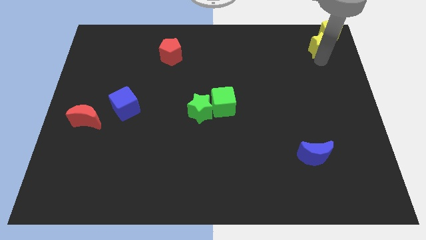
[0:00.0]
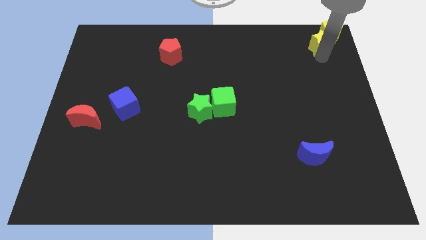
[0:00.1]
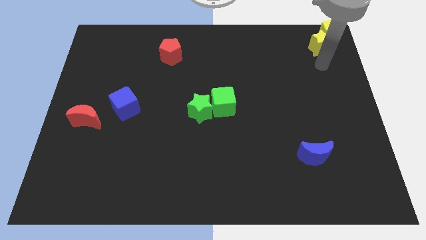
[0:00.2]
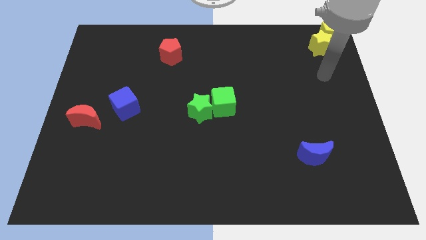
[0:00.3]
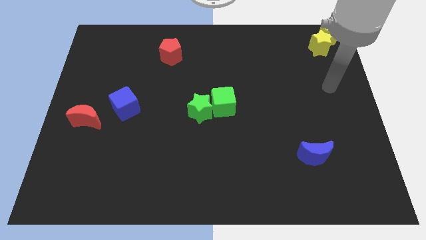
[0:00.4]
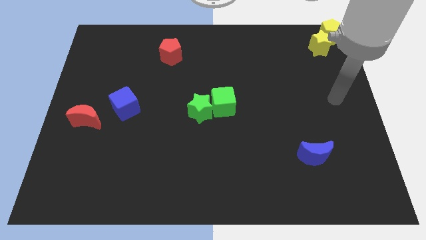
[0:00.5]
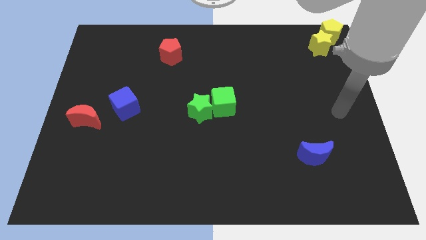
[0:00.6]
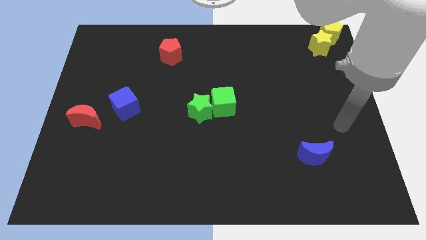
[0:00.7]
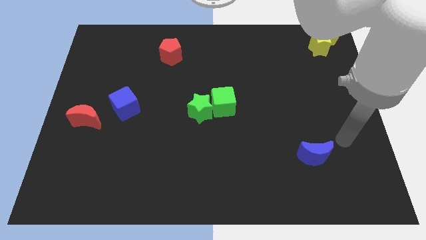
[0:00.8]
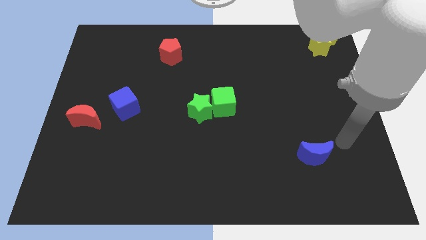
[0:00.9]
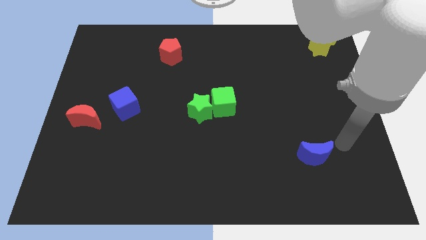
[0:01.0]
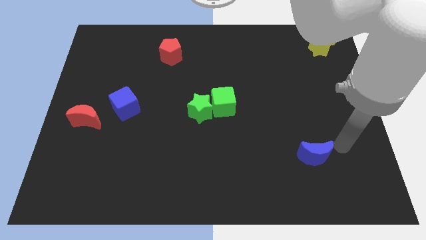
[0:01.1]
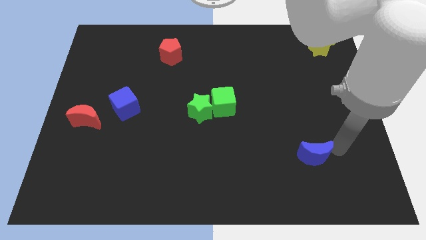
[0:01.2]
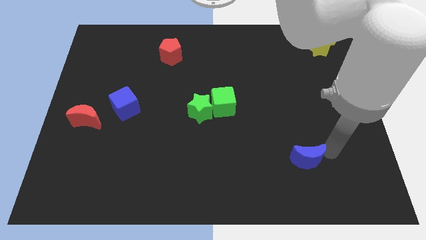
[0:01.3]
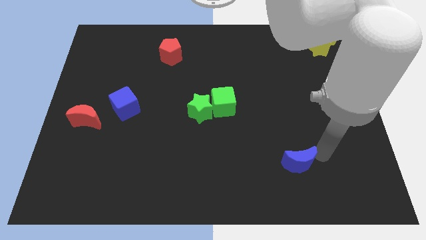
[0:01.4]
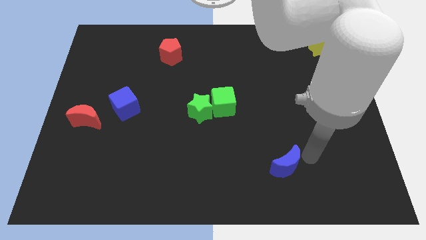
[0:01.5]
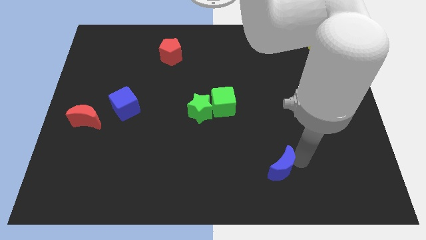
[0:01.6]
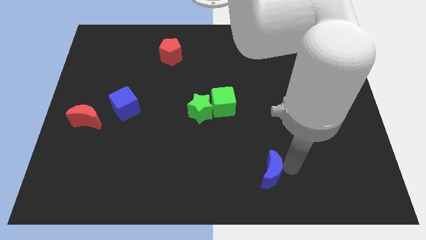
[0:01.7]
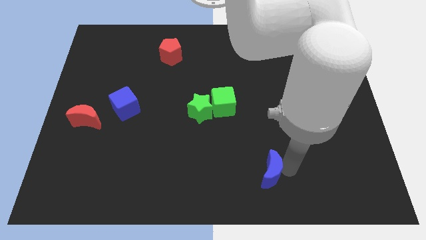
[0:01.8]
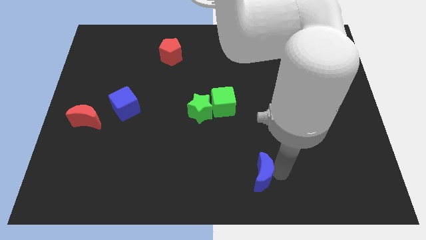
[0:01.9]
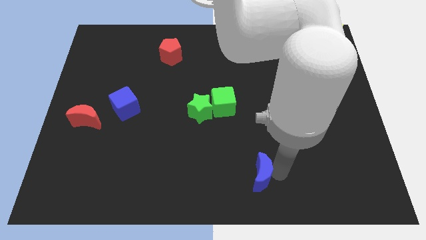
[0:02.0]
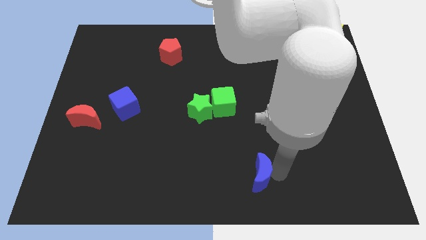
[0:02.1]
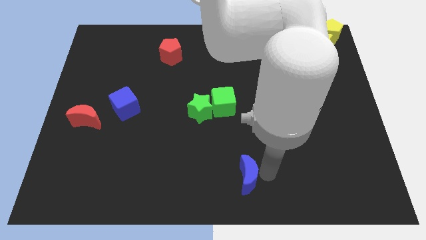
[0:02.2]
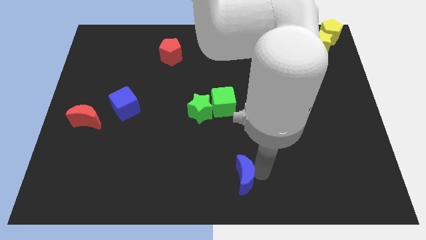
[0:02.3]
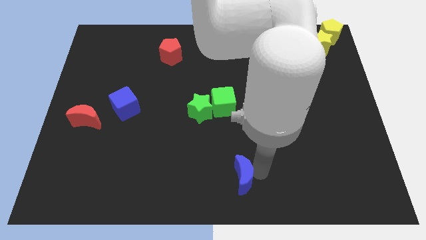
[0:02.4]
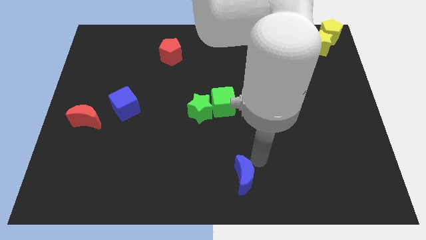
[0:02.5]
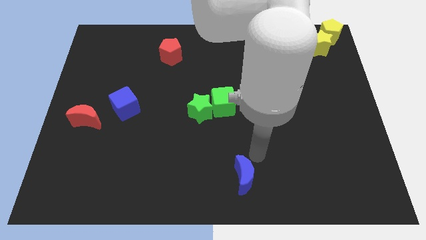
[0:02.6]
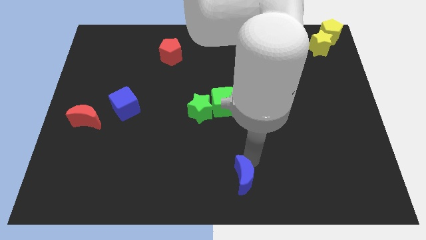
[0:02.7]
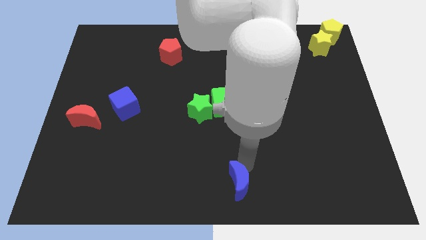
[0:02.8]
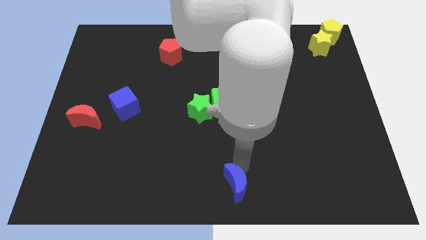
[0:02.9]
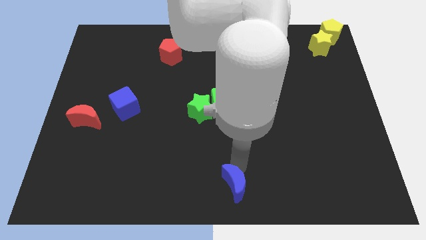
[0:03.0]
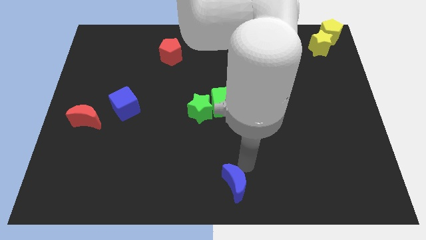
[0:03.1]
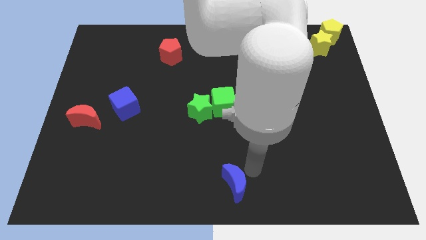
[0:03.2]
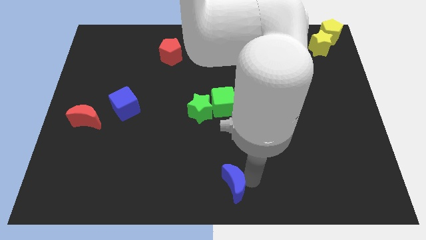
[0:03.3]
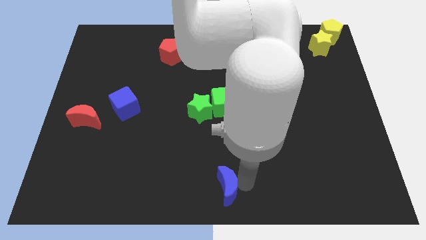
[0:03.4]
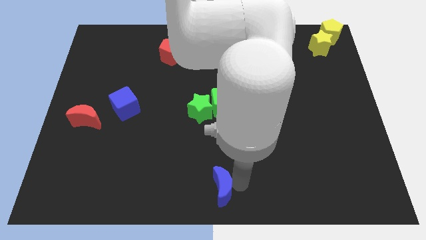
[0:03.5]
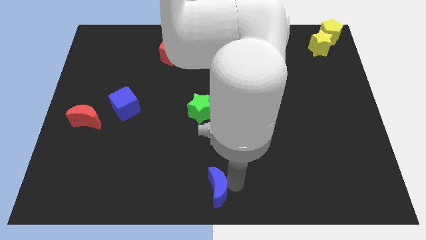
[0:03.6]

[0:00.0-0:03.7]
slide the blue moon towards the bottom center side of the board

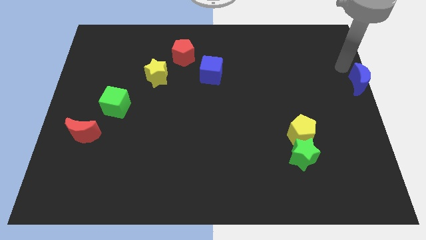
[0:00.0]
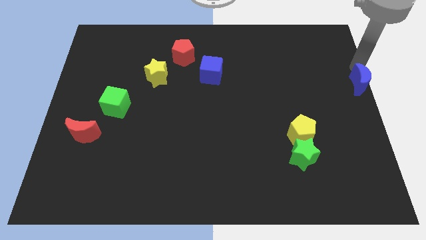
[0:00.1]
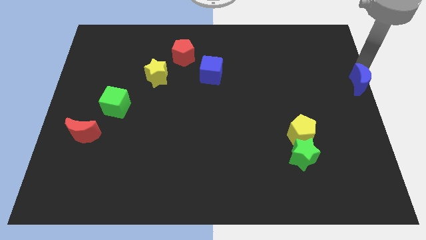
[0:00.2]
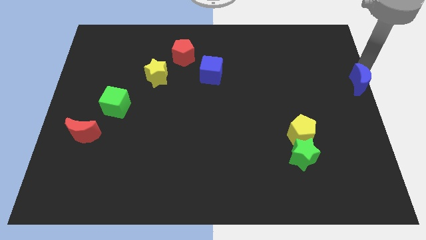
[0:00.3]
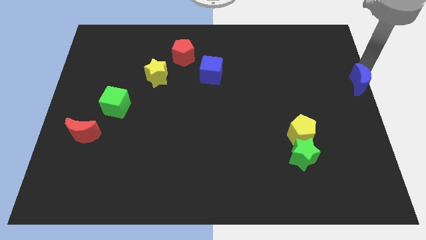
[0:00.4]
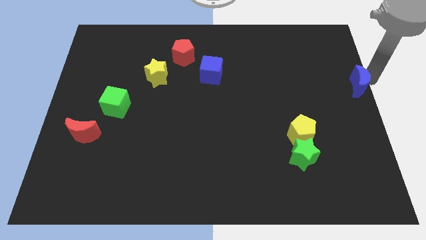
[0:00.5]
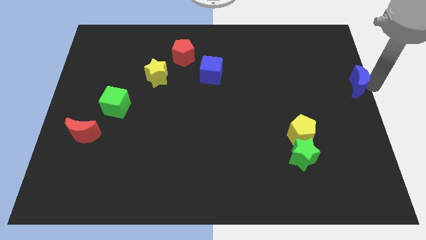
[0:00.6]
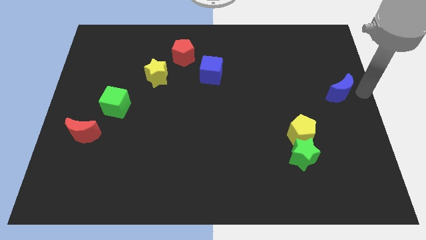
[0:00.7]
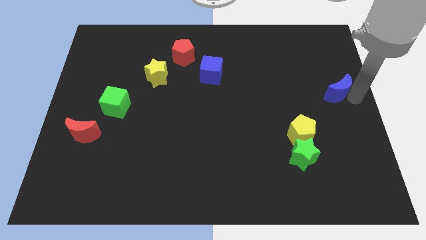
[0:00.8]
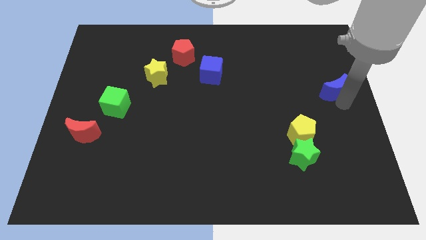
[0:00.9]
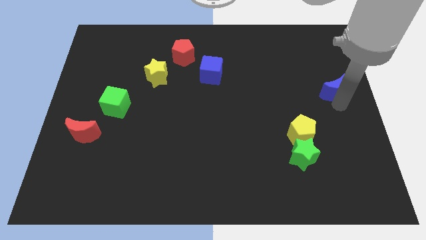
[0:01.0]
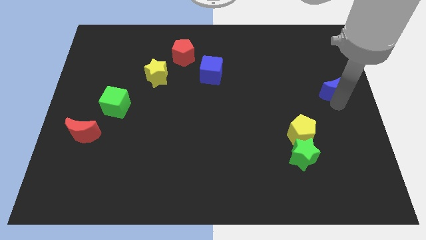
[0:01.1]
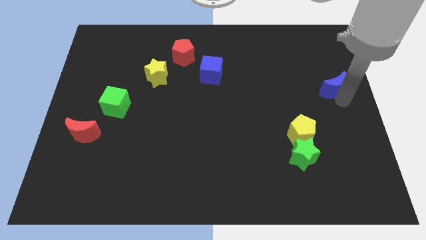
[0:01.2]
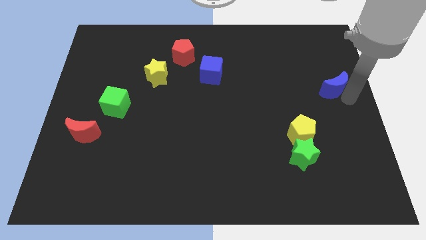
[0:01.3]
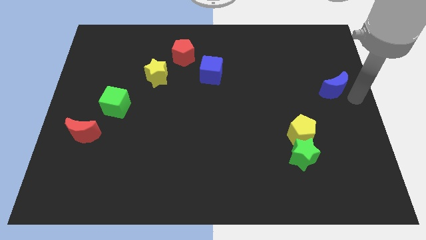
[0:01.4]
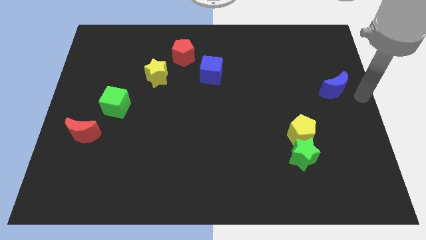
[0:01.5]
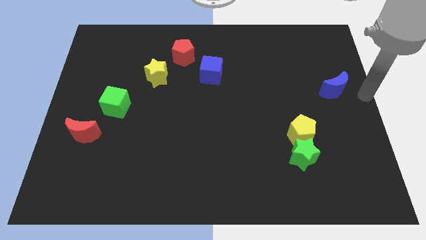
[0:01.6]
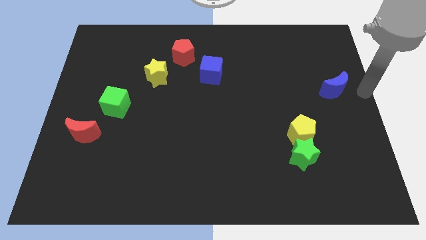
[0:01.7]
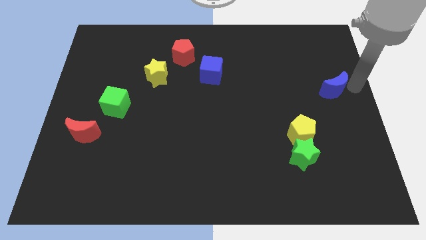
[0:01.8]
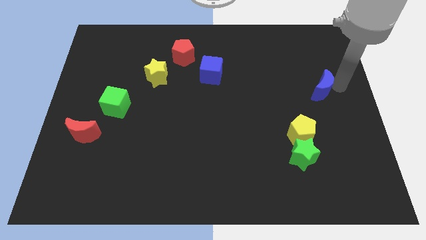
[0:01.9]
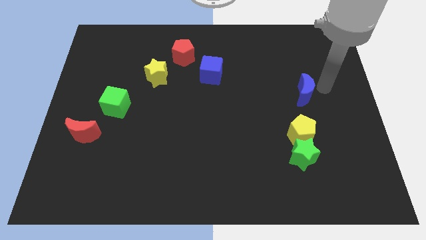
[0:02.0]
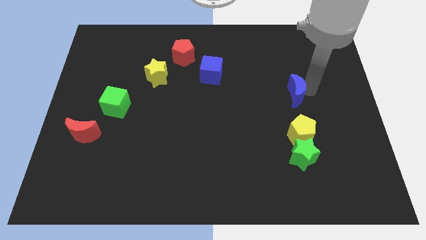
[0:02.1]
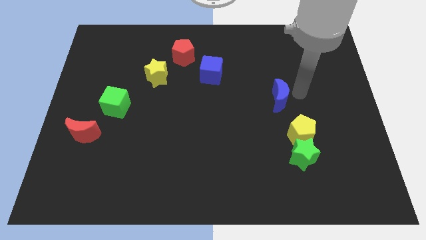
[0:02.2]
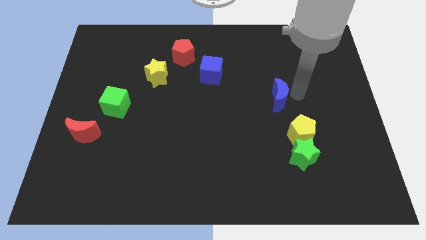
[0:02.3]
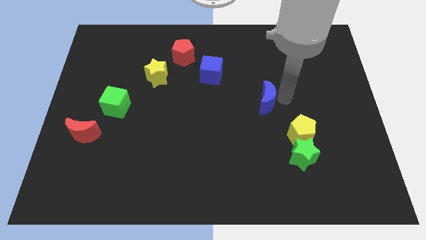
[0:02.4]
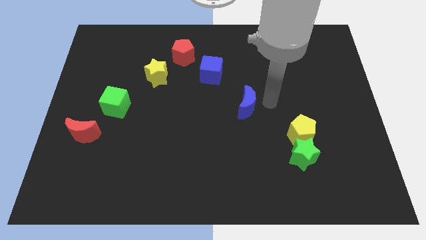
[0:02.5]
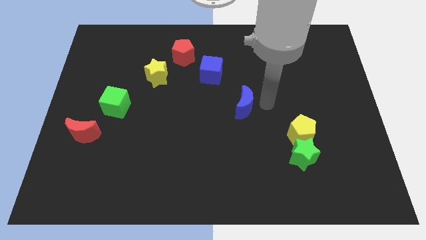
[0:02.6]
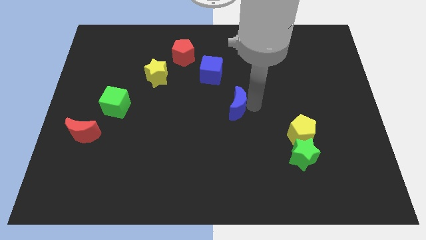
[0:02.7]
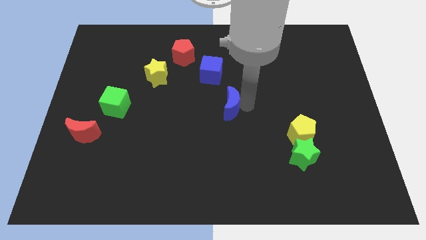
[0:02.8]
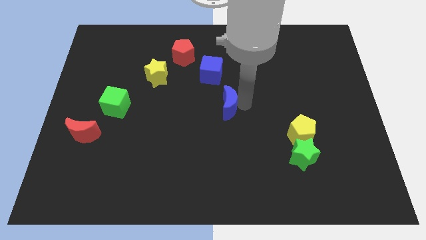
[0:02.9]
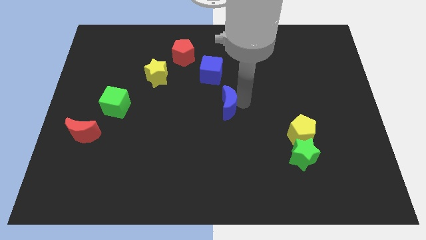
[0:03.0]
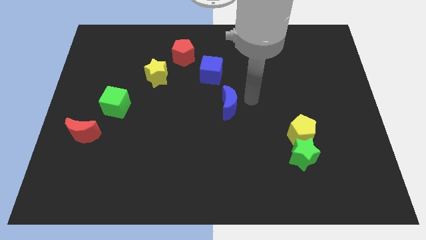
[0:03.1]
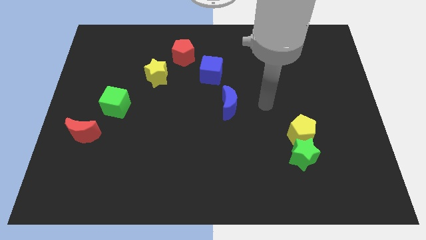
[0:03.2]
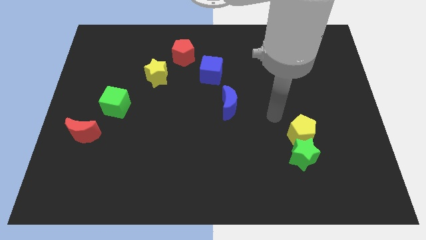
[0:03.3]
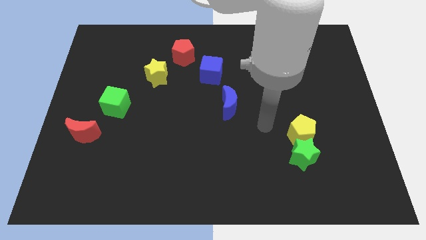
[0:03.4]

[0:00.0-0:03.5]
place the blue moon below the blue cube

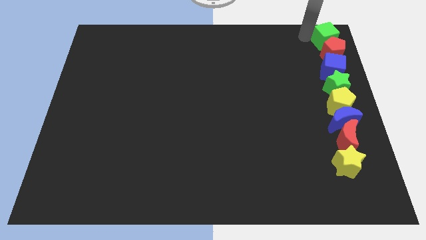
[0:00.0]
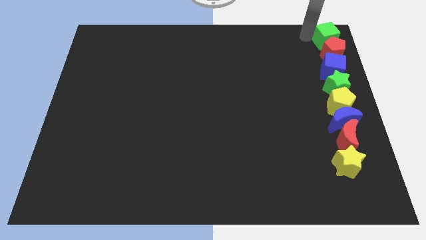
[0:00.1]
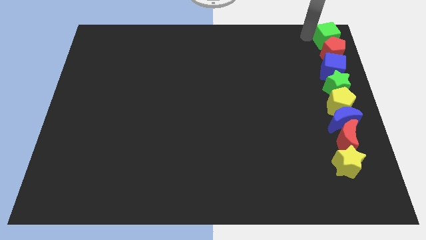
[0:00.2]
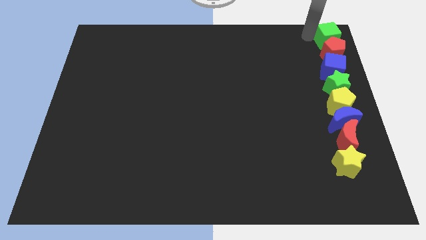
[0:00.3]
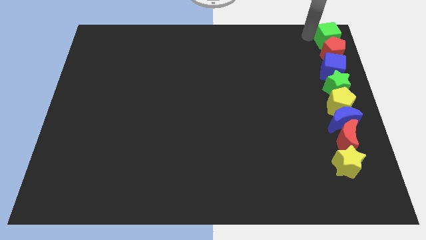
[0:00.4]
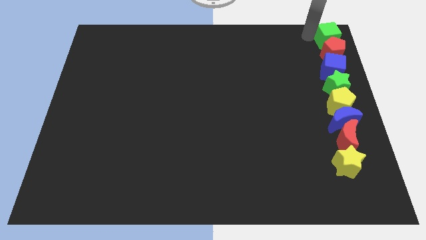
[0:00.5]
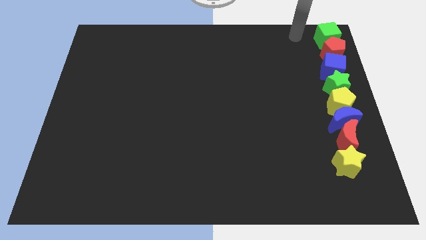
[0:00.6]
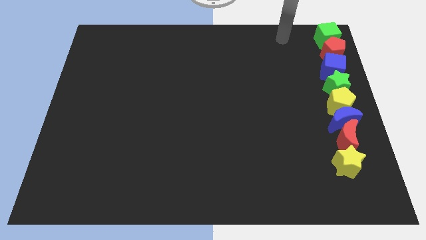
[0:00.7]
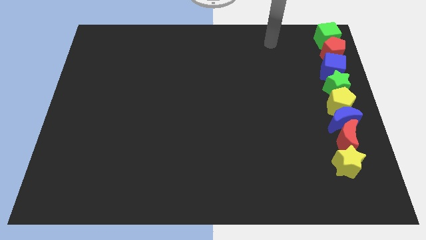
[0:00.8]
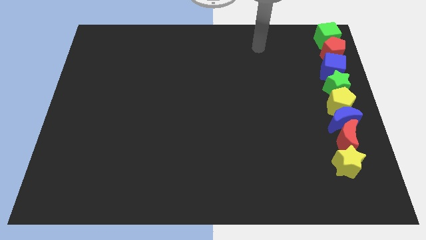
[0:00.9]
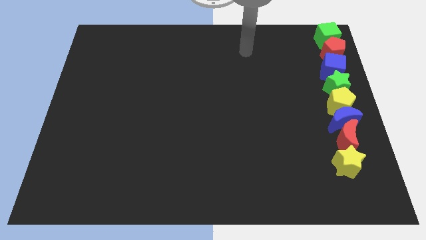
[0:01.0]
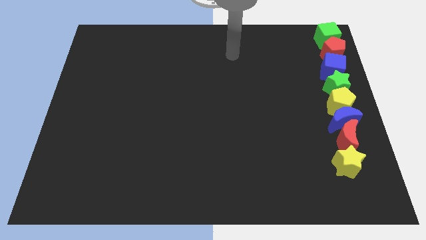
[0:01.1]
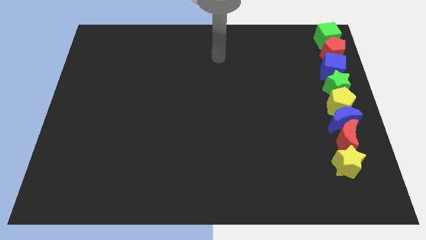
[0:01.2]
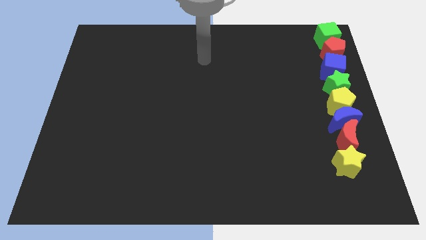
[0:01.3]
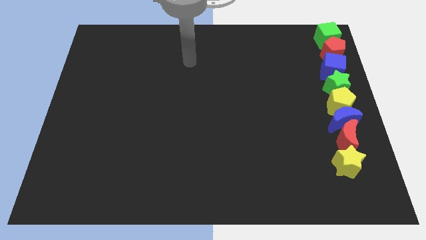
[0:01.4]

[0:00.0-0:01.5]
move your arm away form green cube

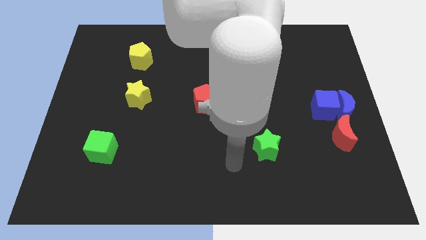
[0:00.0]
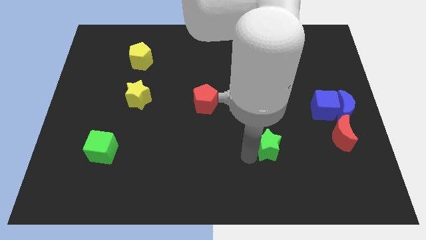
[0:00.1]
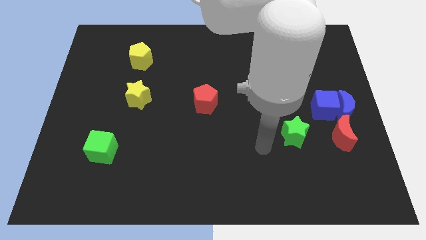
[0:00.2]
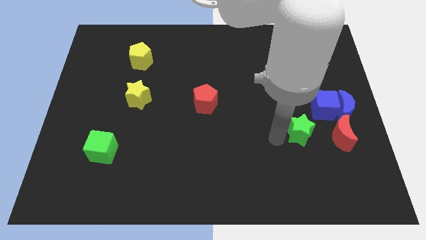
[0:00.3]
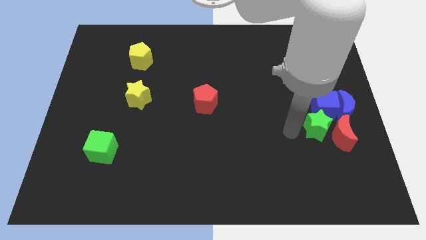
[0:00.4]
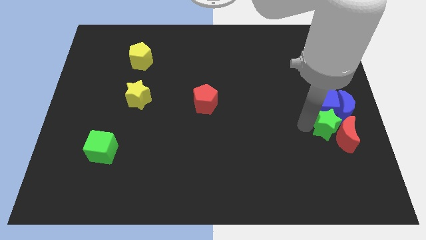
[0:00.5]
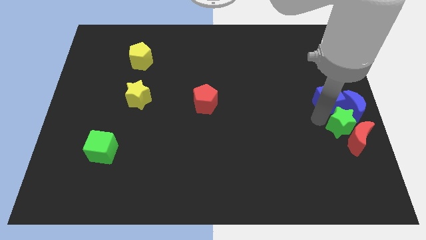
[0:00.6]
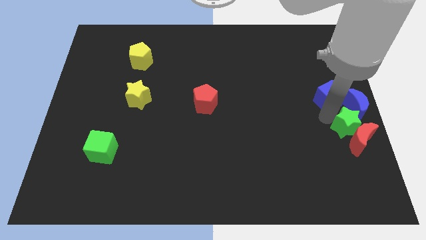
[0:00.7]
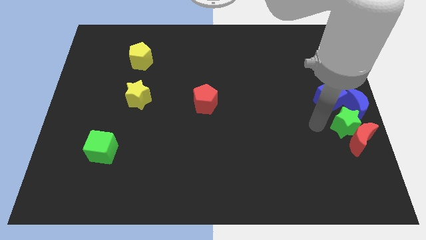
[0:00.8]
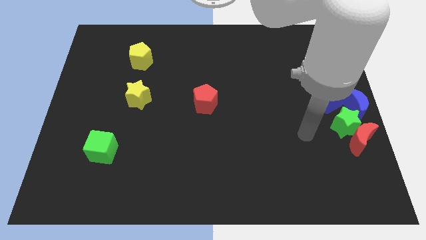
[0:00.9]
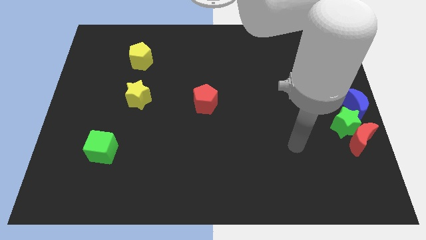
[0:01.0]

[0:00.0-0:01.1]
push the blue moon and red moon with the green star
